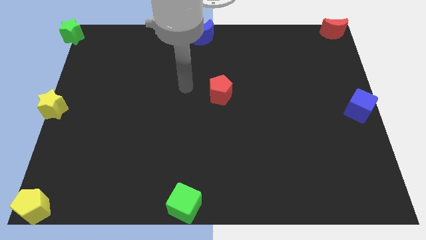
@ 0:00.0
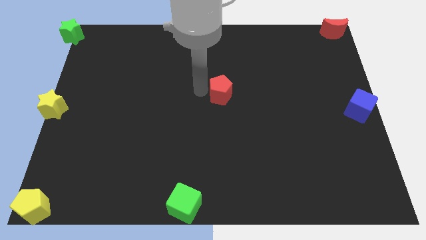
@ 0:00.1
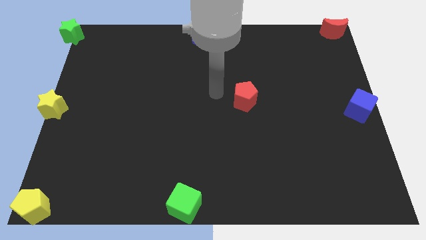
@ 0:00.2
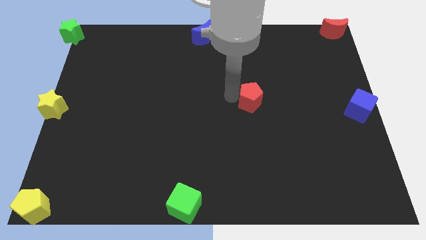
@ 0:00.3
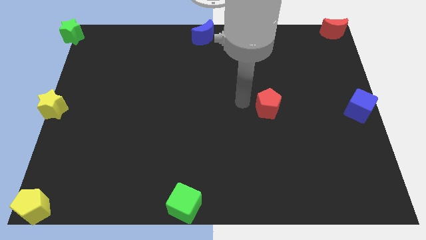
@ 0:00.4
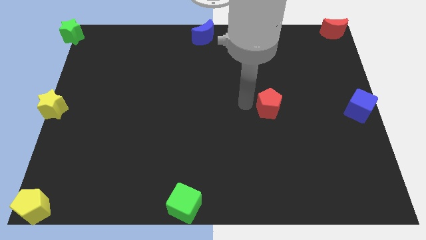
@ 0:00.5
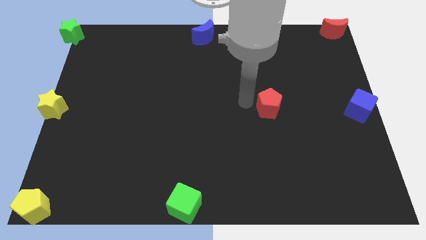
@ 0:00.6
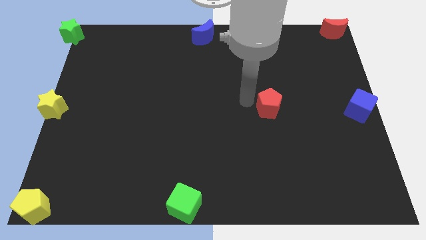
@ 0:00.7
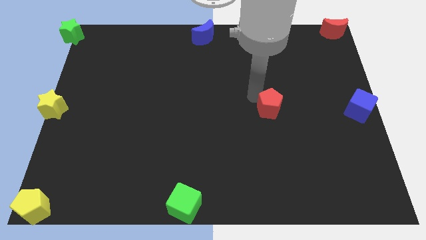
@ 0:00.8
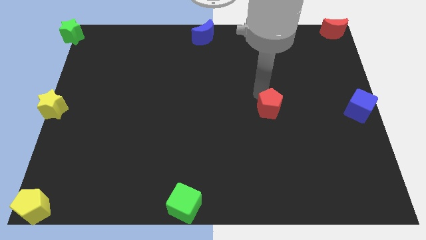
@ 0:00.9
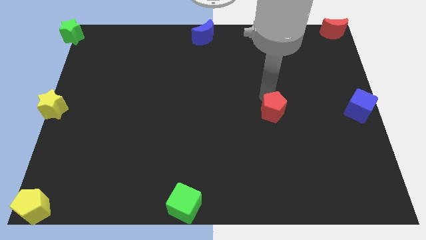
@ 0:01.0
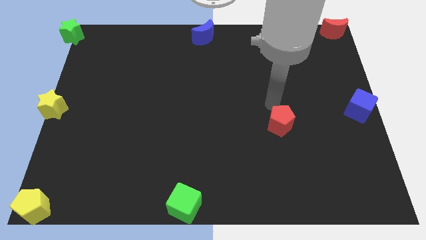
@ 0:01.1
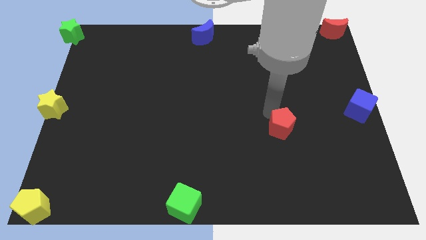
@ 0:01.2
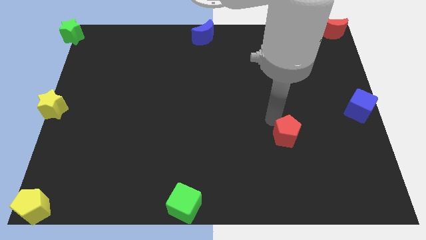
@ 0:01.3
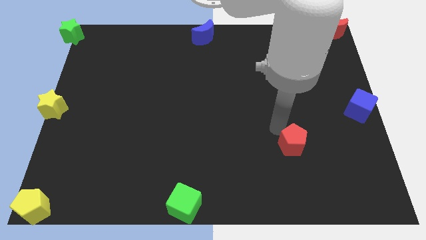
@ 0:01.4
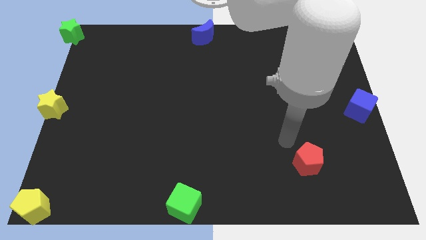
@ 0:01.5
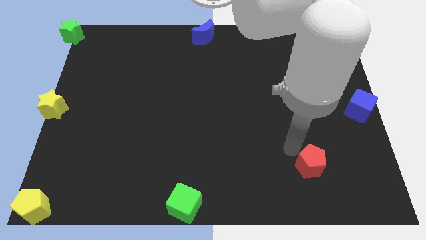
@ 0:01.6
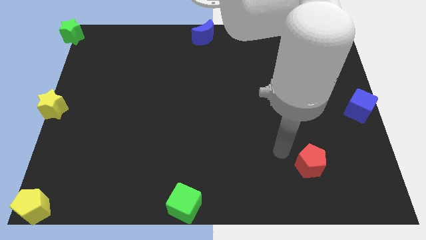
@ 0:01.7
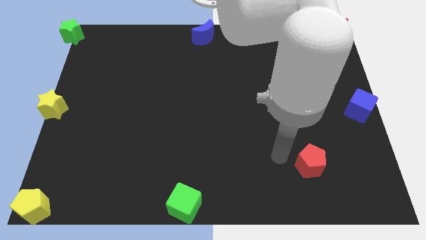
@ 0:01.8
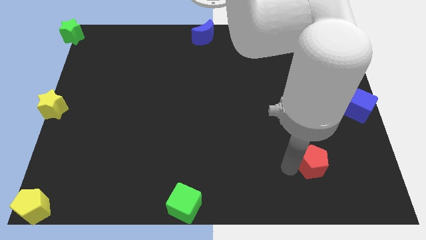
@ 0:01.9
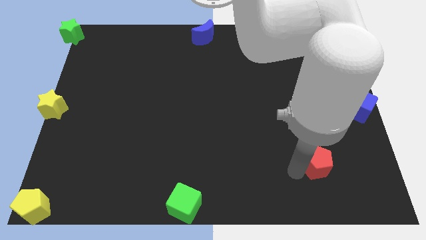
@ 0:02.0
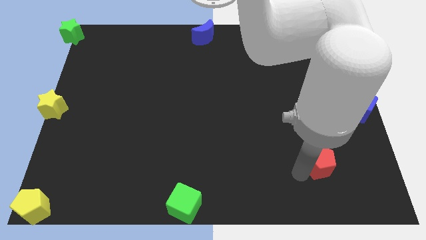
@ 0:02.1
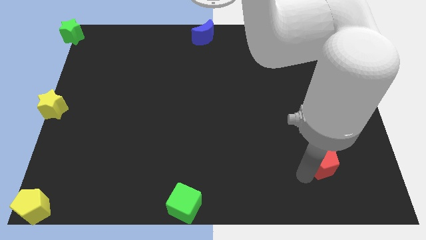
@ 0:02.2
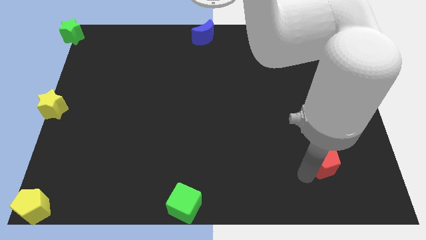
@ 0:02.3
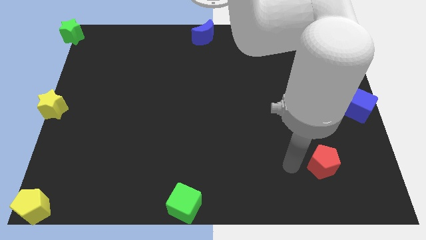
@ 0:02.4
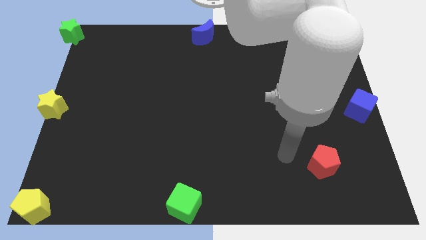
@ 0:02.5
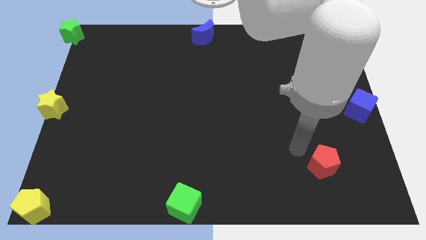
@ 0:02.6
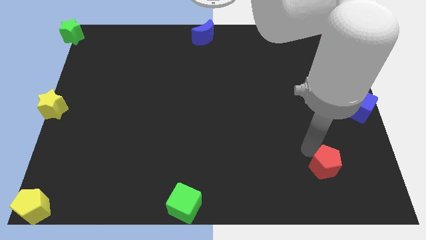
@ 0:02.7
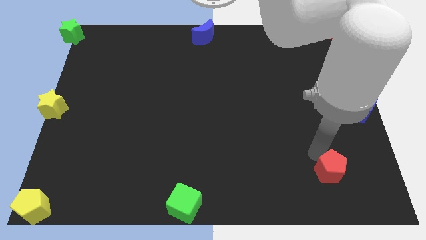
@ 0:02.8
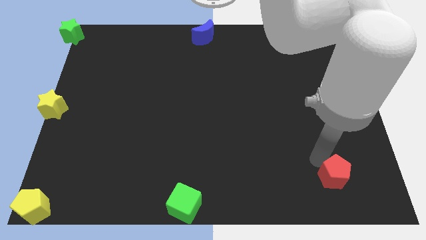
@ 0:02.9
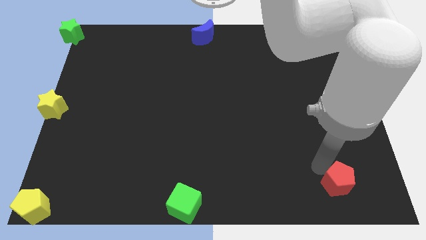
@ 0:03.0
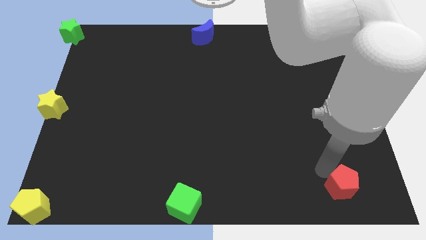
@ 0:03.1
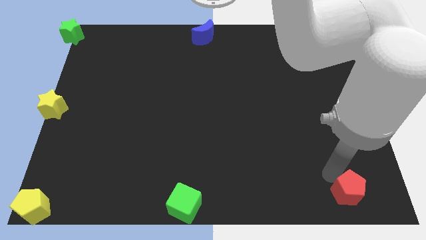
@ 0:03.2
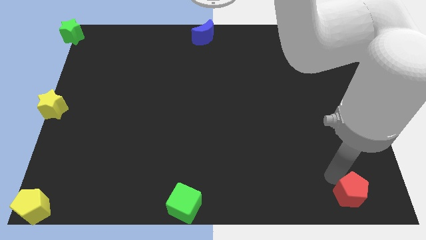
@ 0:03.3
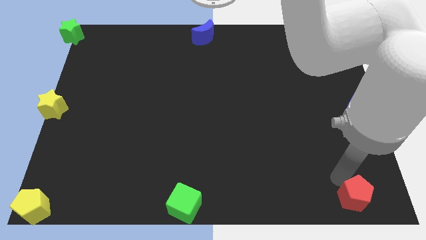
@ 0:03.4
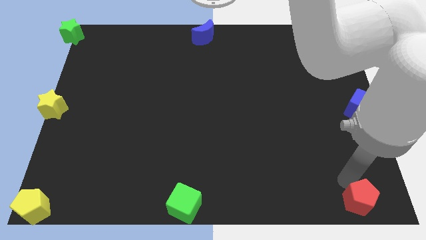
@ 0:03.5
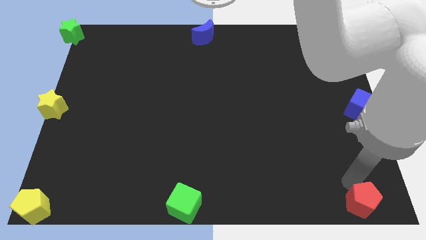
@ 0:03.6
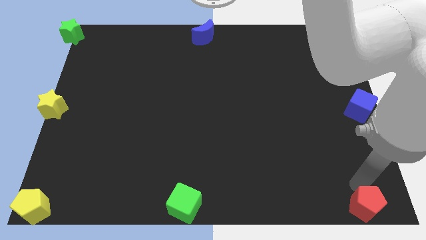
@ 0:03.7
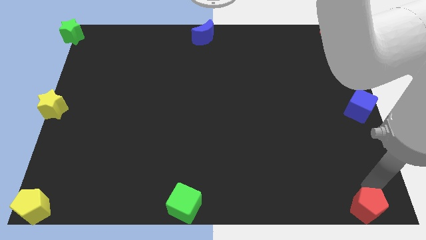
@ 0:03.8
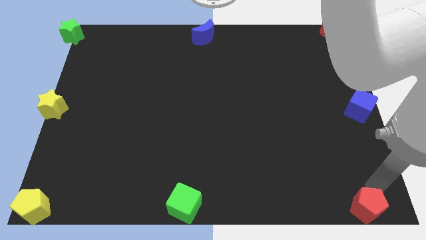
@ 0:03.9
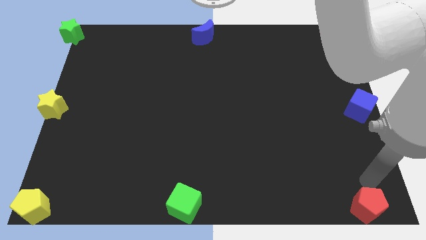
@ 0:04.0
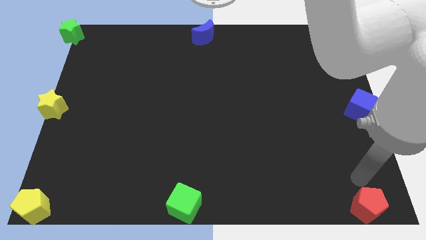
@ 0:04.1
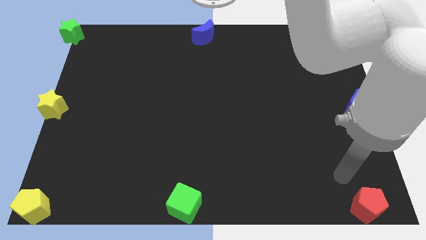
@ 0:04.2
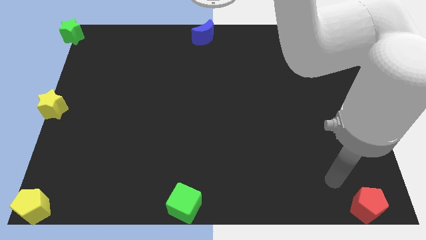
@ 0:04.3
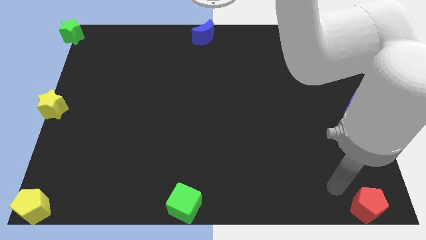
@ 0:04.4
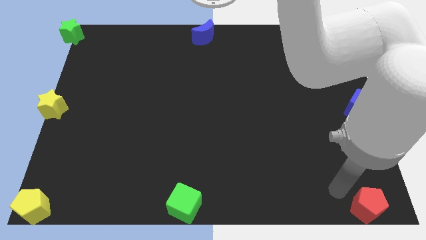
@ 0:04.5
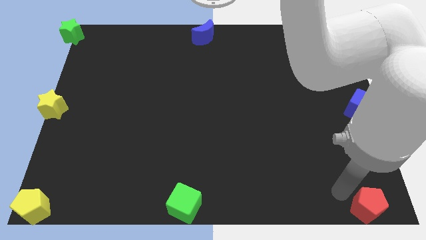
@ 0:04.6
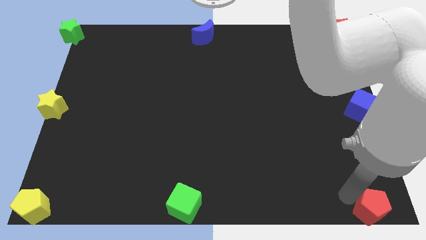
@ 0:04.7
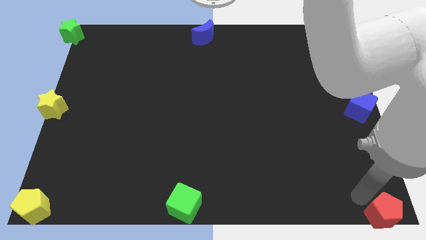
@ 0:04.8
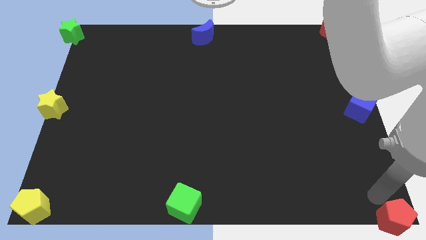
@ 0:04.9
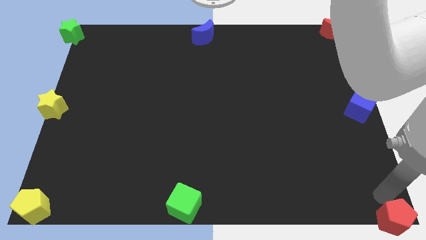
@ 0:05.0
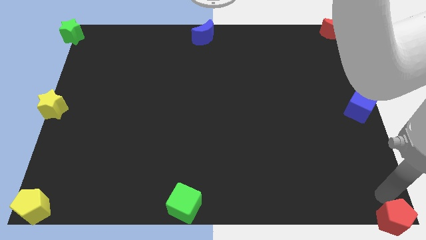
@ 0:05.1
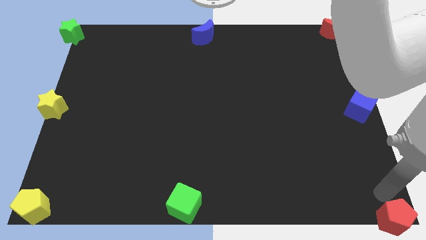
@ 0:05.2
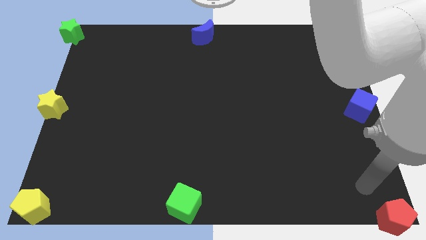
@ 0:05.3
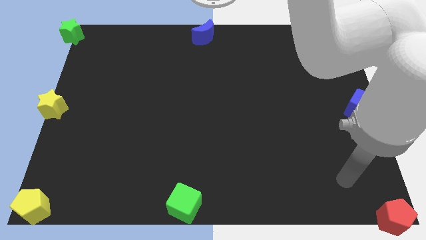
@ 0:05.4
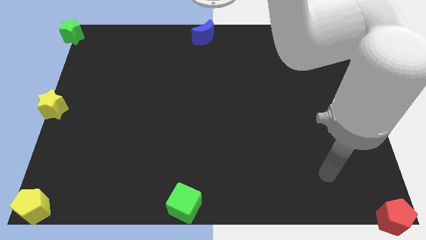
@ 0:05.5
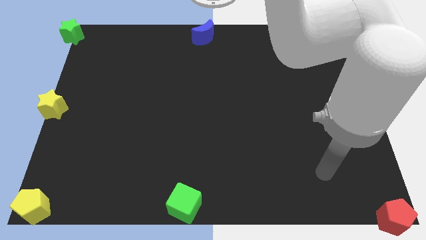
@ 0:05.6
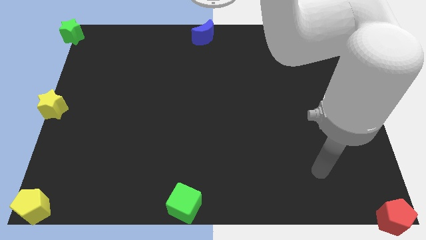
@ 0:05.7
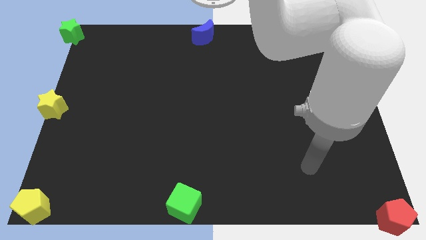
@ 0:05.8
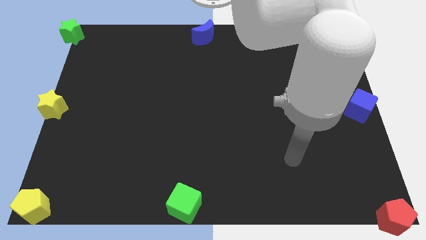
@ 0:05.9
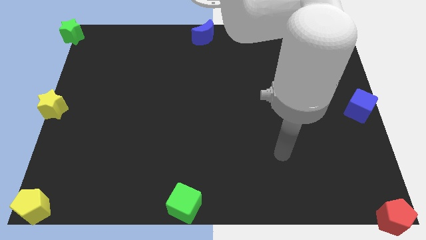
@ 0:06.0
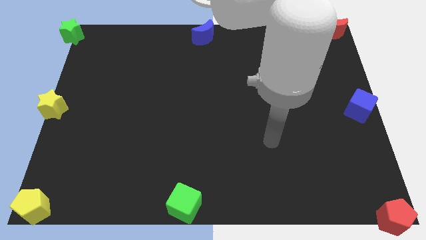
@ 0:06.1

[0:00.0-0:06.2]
put the red pentagon to the bottom right of the corner

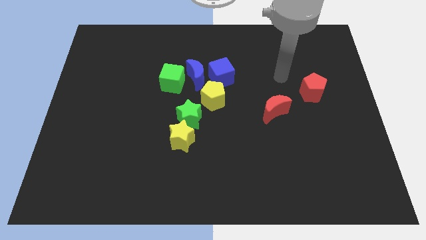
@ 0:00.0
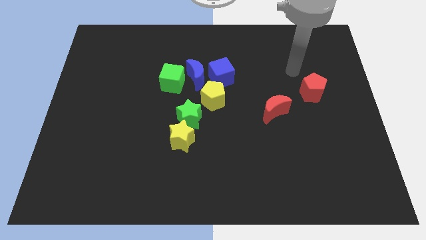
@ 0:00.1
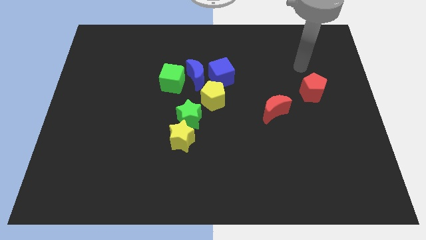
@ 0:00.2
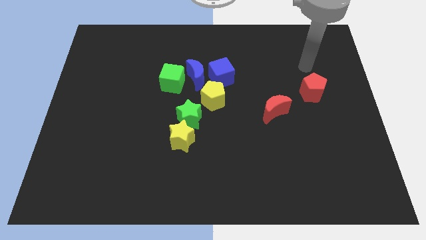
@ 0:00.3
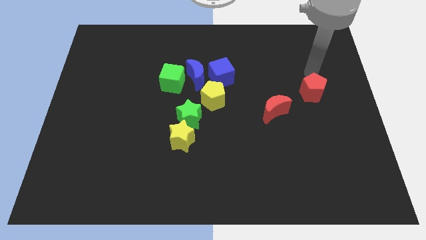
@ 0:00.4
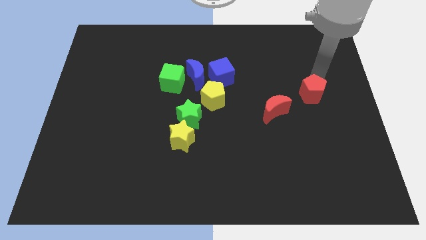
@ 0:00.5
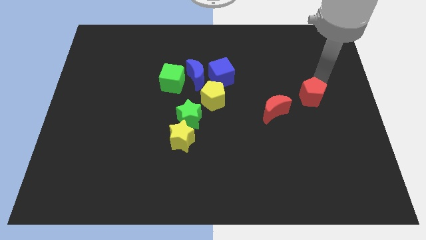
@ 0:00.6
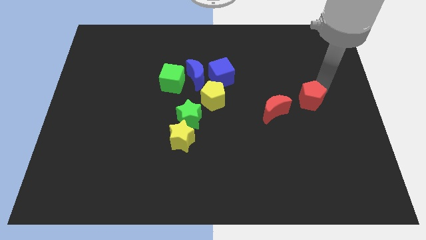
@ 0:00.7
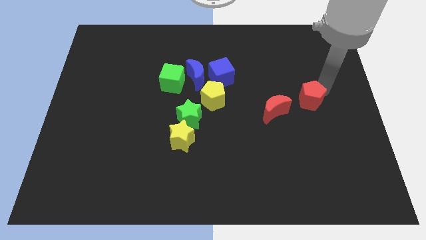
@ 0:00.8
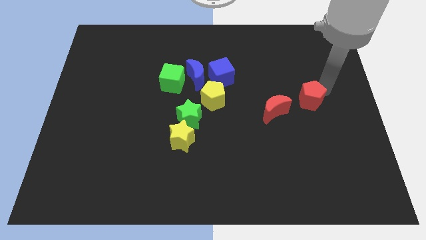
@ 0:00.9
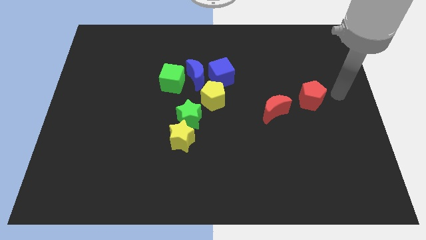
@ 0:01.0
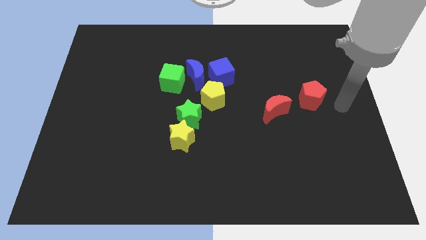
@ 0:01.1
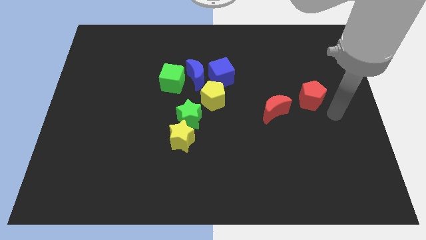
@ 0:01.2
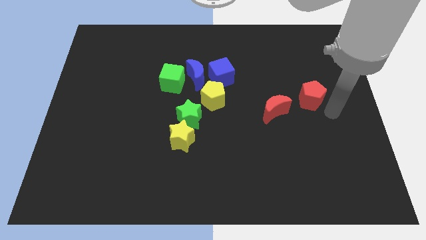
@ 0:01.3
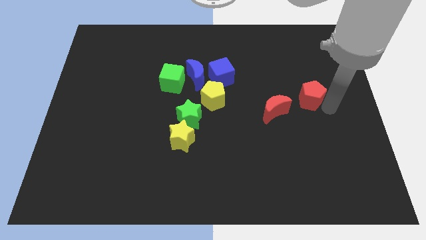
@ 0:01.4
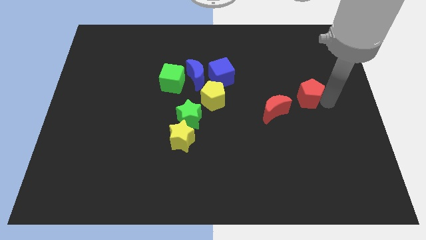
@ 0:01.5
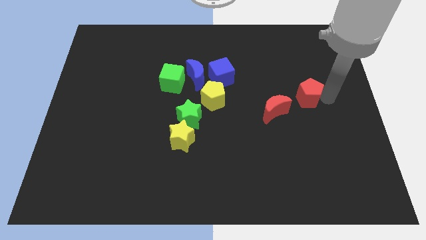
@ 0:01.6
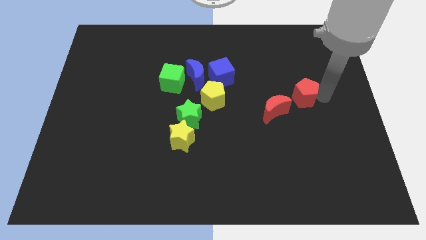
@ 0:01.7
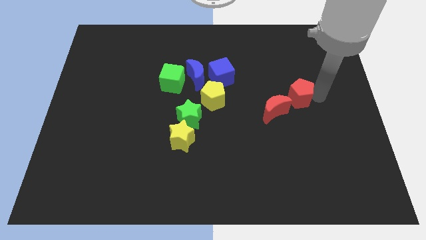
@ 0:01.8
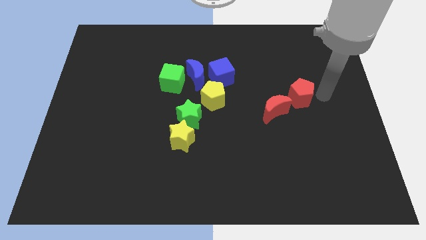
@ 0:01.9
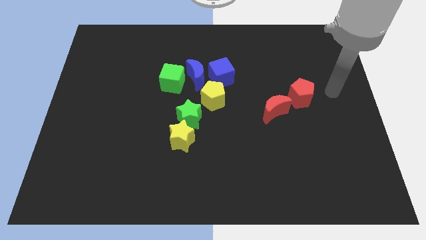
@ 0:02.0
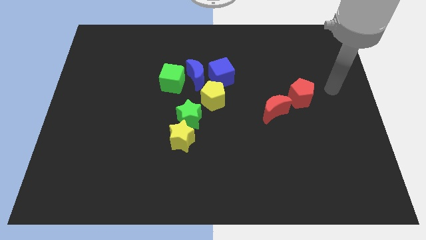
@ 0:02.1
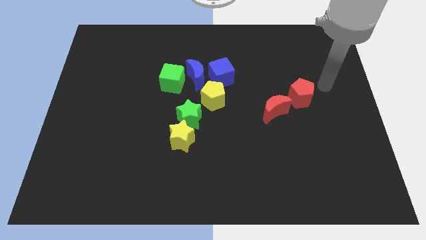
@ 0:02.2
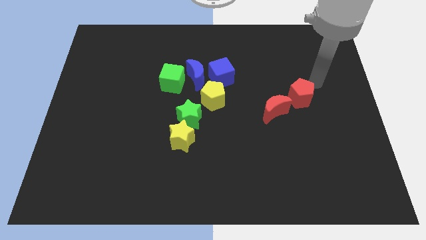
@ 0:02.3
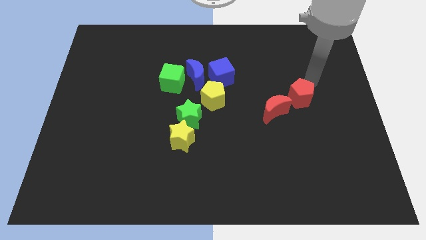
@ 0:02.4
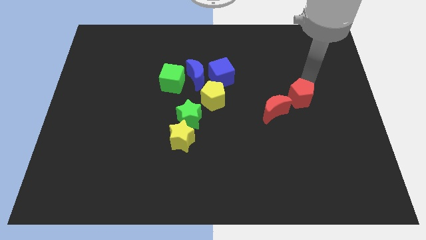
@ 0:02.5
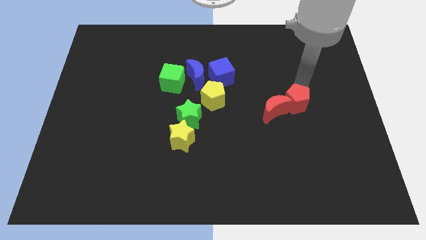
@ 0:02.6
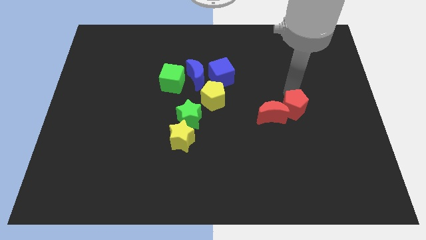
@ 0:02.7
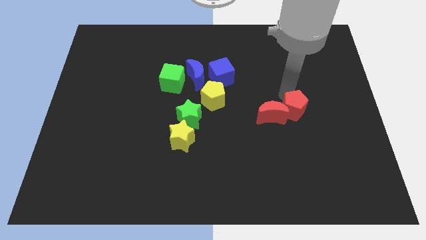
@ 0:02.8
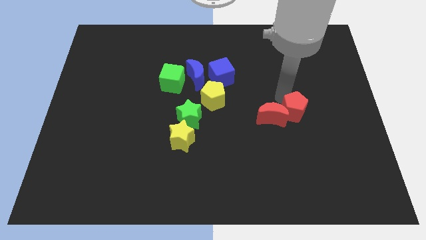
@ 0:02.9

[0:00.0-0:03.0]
move the red pentagon into red crescent
